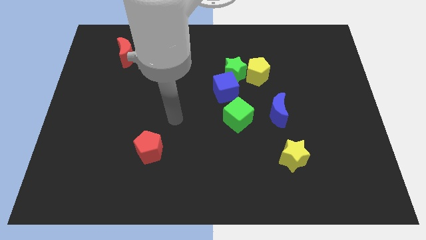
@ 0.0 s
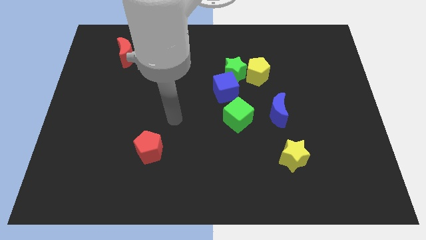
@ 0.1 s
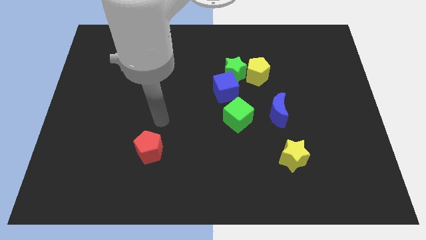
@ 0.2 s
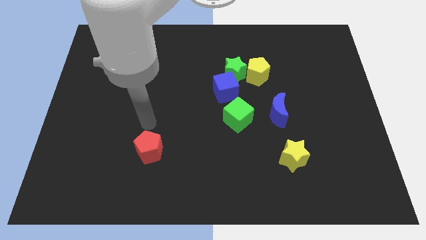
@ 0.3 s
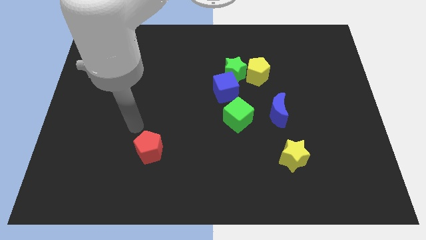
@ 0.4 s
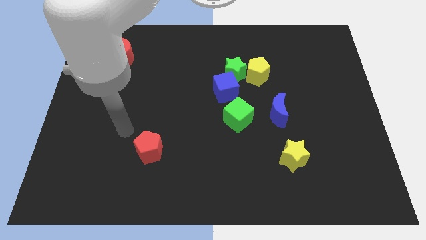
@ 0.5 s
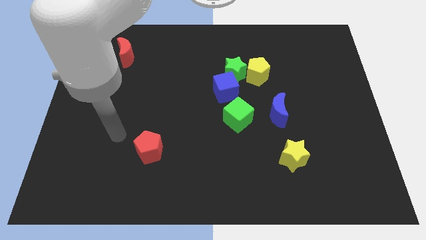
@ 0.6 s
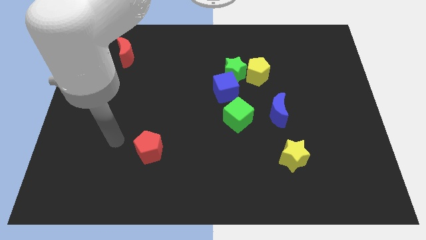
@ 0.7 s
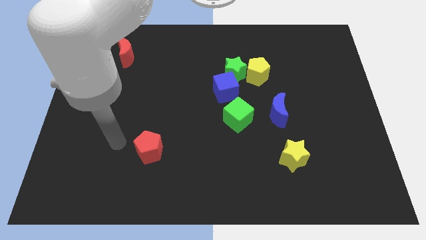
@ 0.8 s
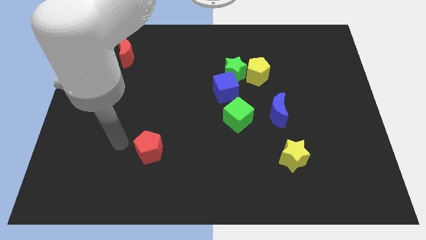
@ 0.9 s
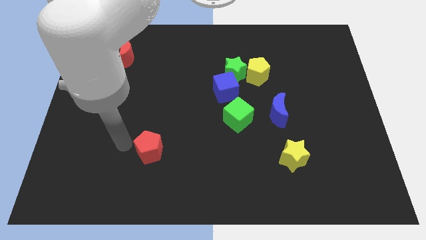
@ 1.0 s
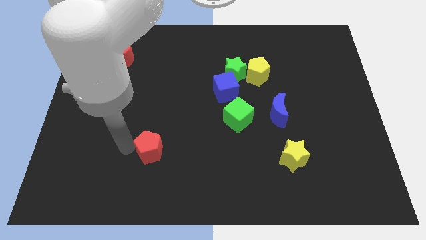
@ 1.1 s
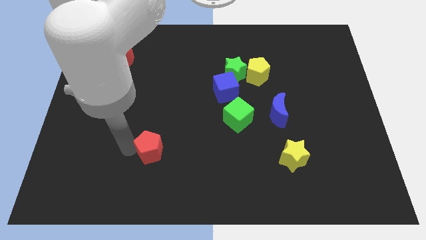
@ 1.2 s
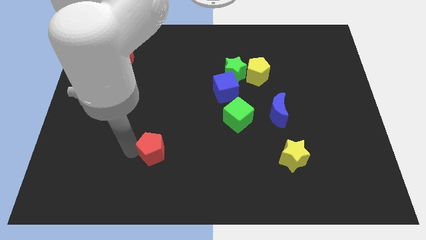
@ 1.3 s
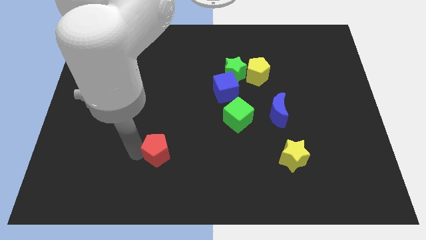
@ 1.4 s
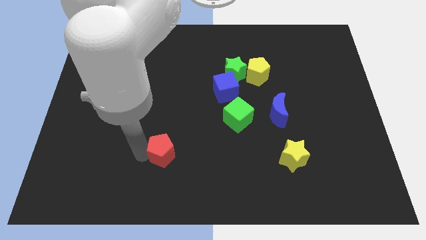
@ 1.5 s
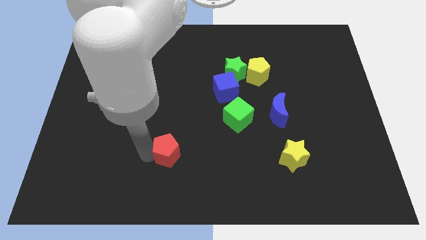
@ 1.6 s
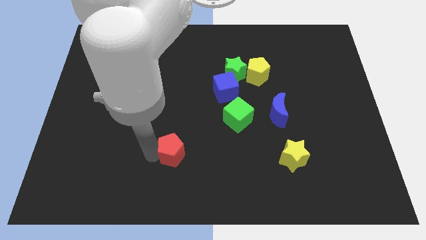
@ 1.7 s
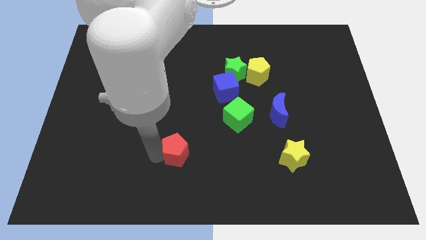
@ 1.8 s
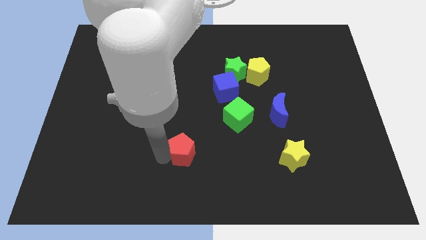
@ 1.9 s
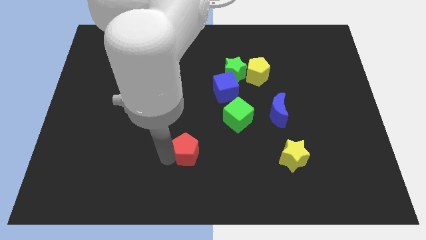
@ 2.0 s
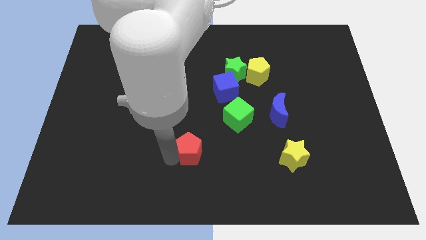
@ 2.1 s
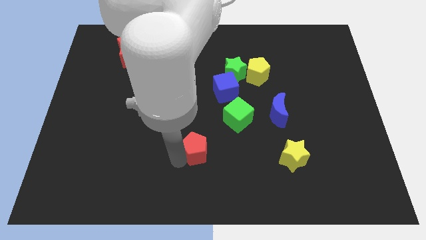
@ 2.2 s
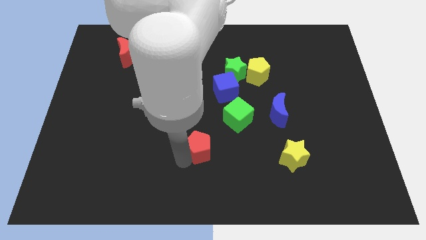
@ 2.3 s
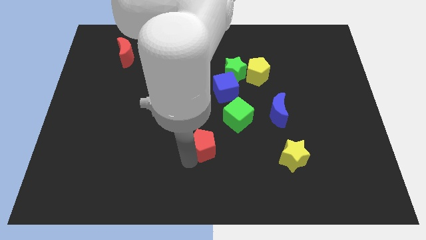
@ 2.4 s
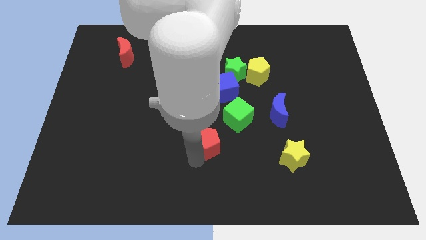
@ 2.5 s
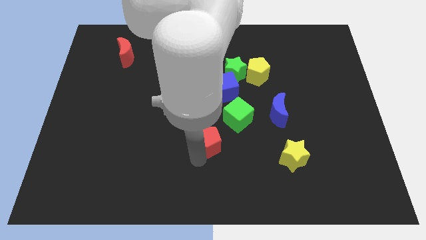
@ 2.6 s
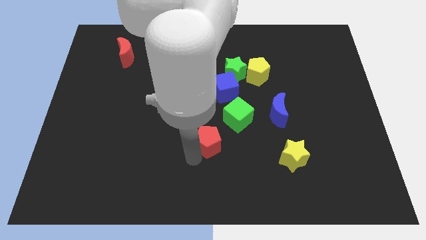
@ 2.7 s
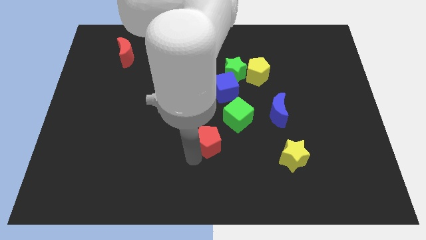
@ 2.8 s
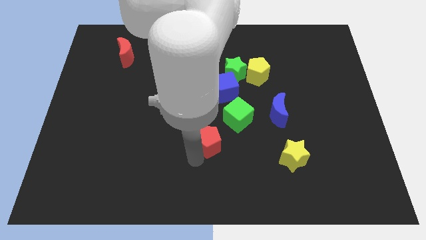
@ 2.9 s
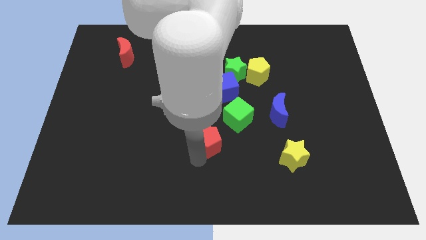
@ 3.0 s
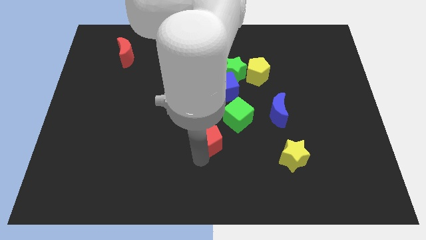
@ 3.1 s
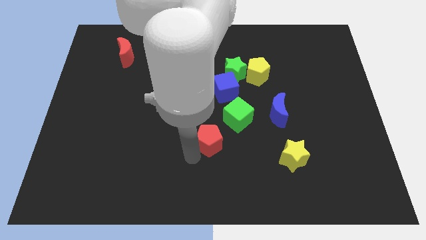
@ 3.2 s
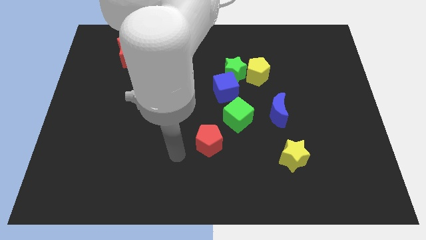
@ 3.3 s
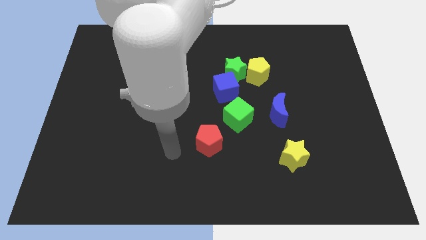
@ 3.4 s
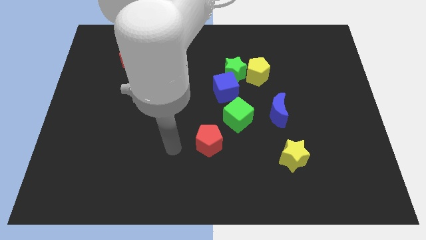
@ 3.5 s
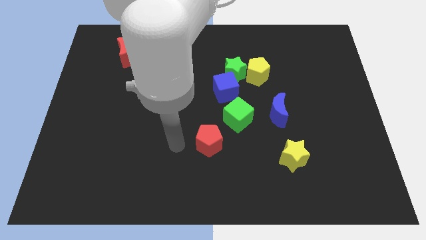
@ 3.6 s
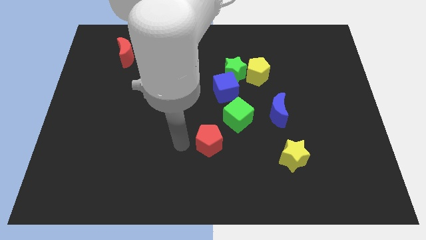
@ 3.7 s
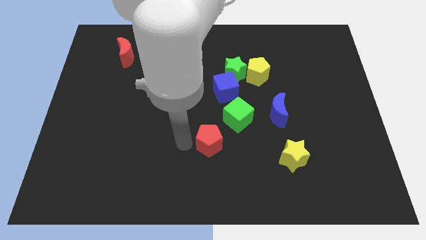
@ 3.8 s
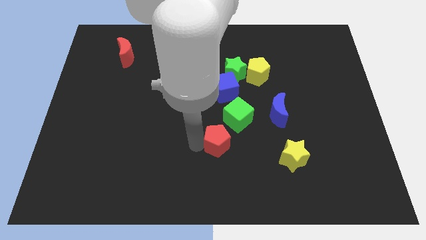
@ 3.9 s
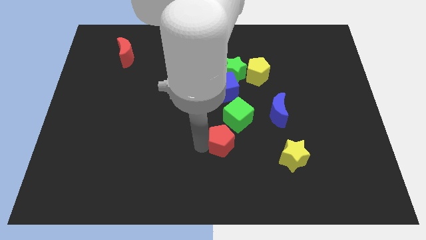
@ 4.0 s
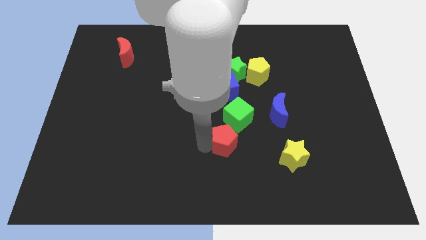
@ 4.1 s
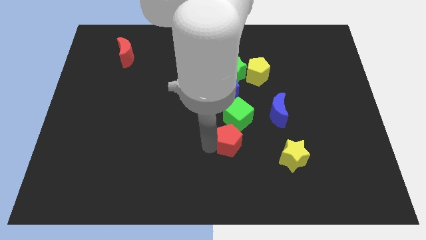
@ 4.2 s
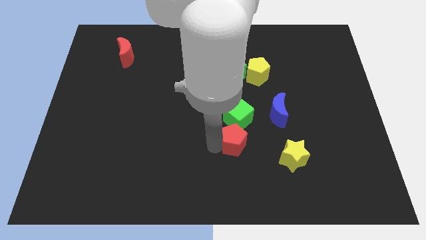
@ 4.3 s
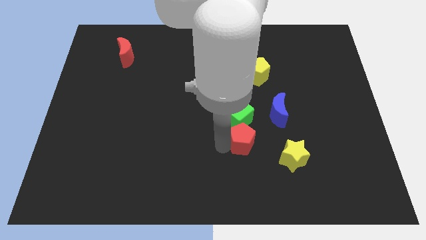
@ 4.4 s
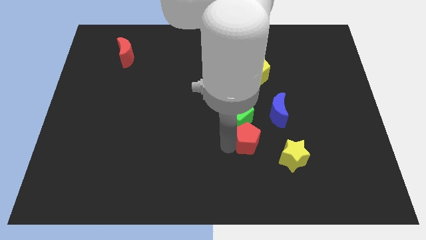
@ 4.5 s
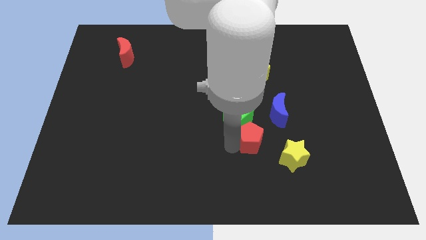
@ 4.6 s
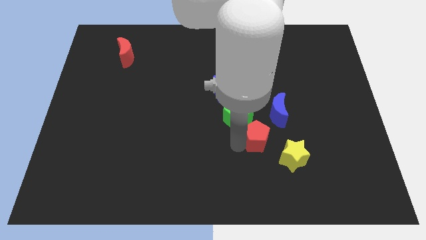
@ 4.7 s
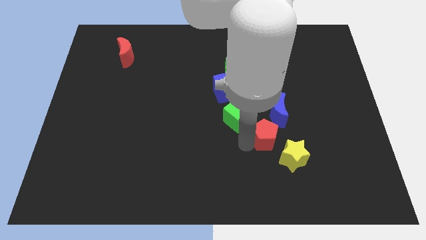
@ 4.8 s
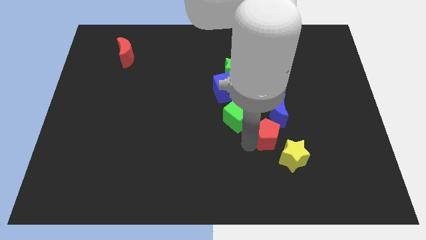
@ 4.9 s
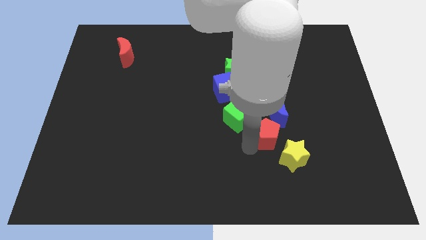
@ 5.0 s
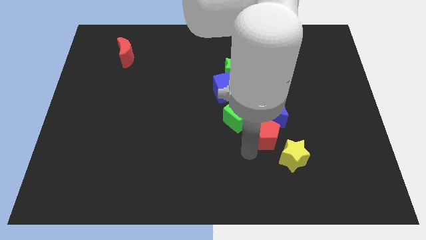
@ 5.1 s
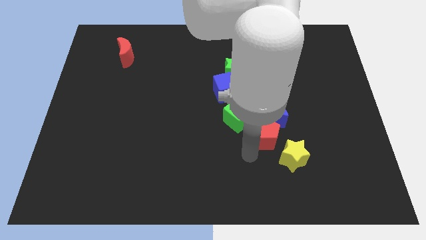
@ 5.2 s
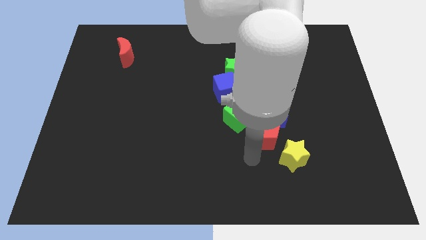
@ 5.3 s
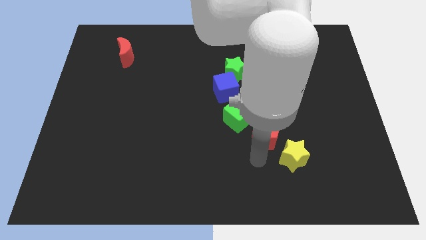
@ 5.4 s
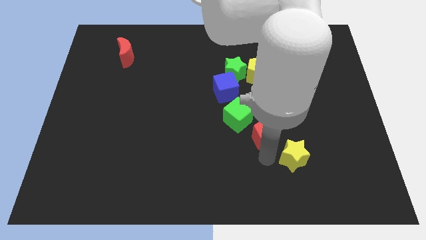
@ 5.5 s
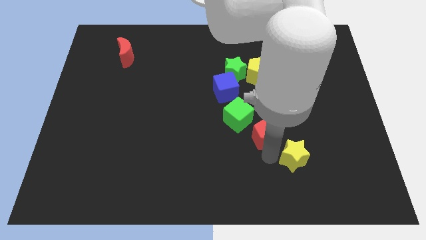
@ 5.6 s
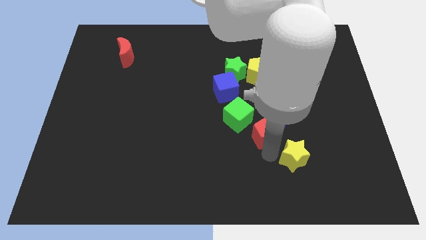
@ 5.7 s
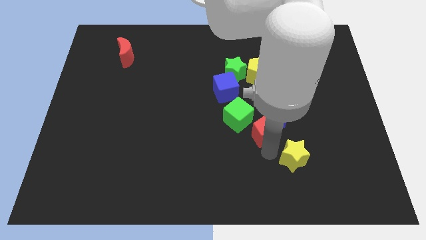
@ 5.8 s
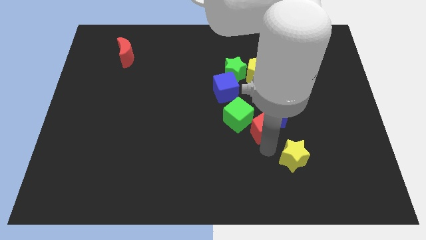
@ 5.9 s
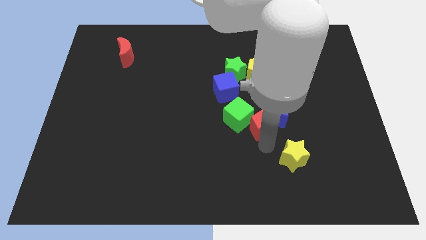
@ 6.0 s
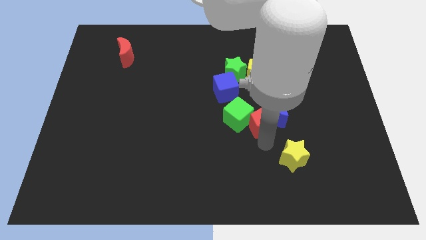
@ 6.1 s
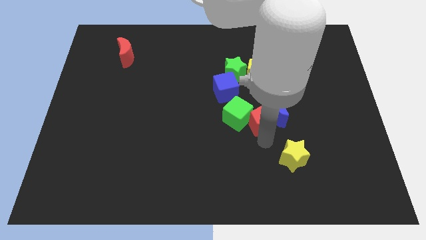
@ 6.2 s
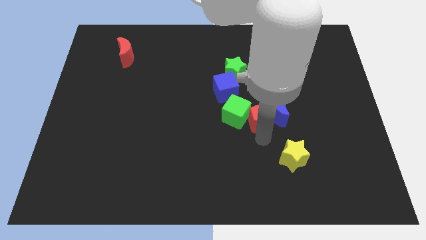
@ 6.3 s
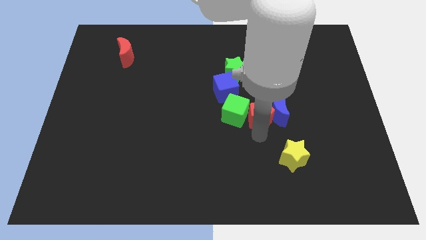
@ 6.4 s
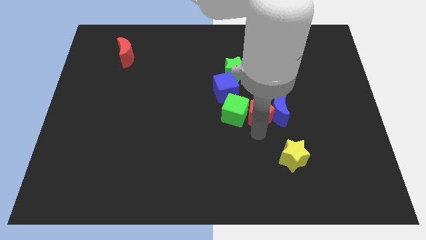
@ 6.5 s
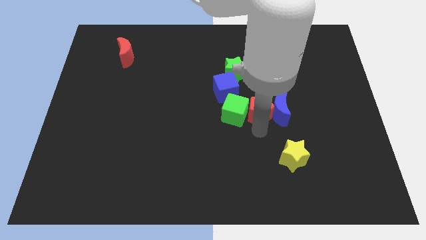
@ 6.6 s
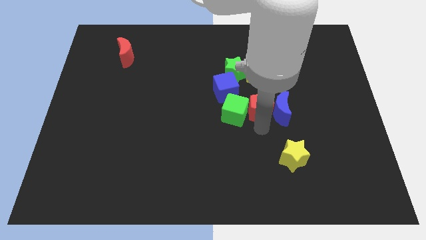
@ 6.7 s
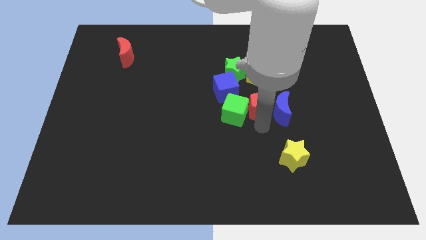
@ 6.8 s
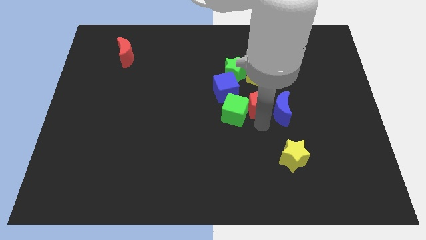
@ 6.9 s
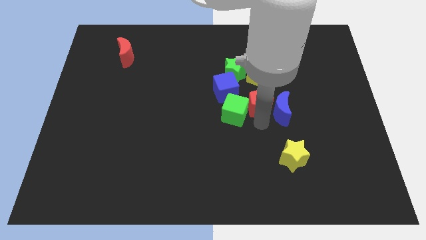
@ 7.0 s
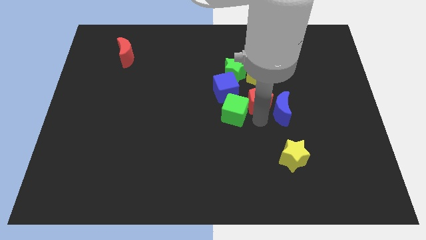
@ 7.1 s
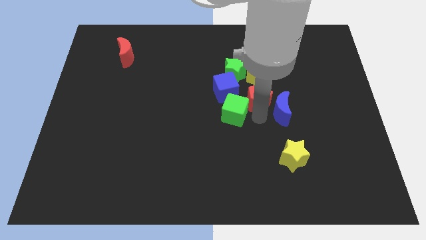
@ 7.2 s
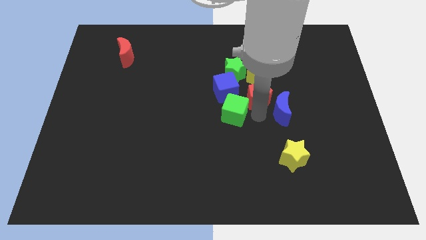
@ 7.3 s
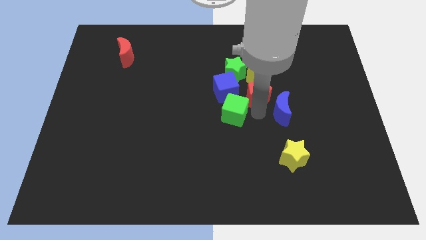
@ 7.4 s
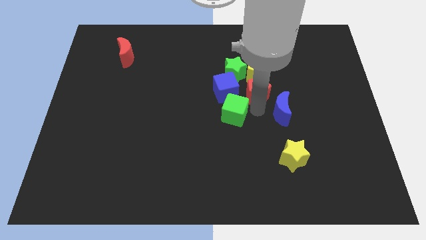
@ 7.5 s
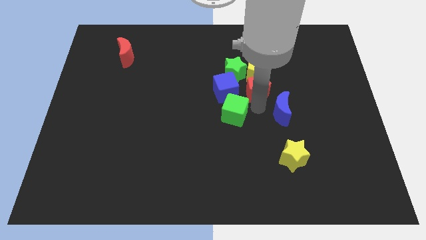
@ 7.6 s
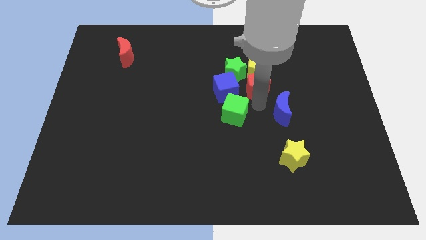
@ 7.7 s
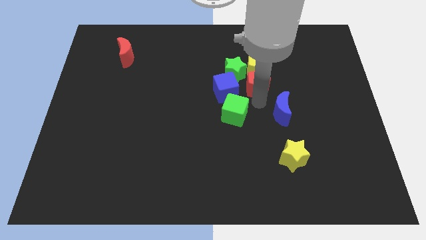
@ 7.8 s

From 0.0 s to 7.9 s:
move the red pentagon close to the yellow pentagon

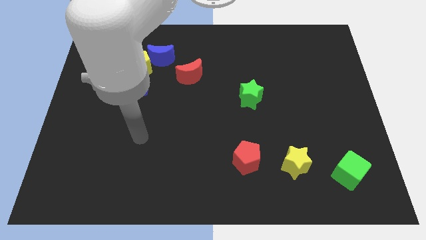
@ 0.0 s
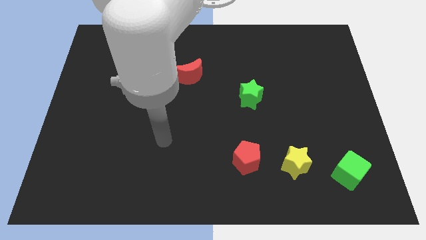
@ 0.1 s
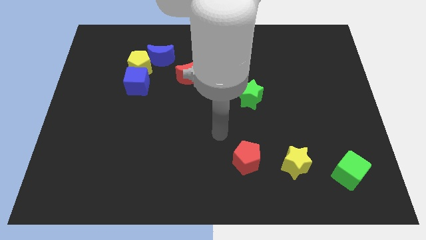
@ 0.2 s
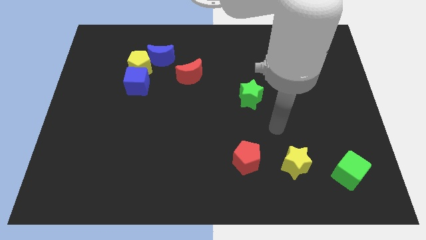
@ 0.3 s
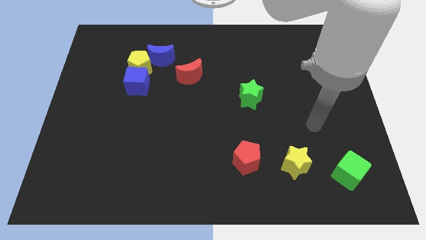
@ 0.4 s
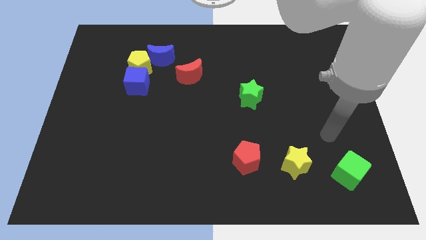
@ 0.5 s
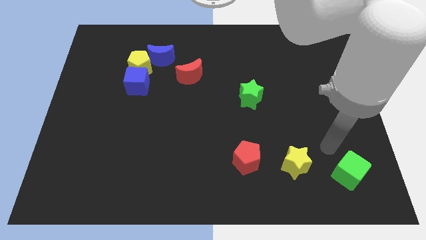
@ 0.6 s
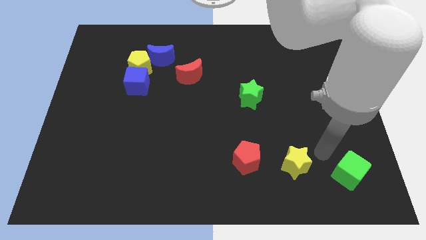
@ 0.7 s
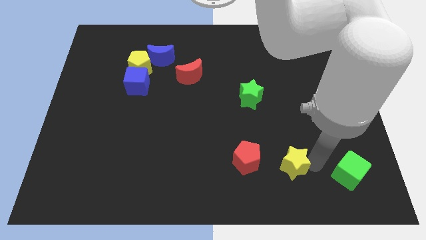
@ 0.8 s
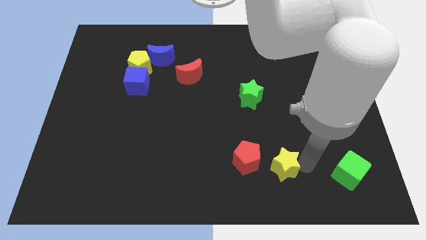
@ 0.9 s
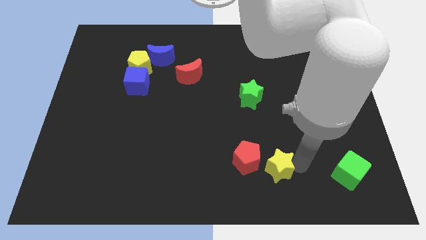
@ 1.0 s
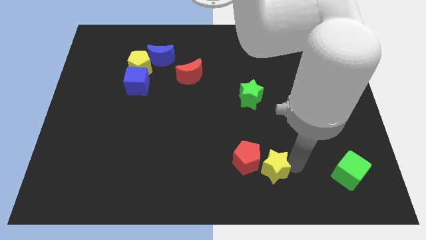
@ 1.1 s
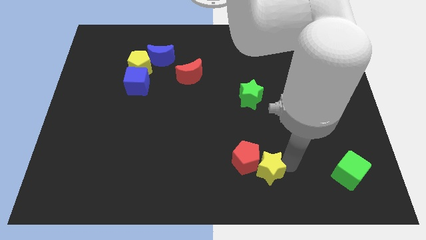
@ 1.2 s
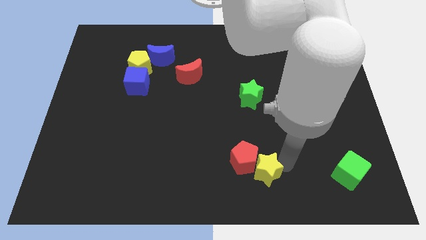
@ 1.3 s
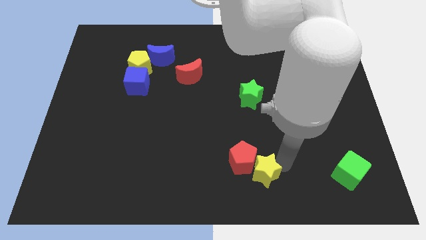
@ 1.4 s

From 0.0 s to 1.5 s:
push the yellow star to the red pentagon
